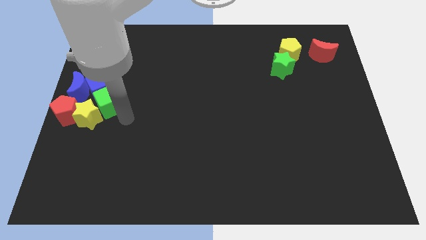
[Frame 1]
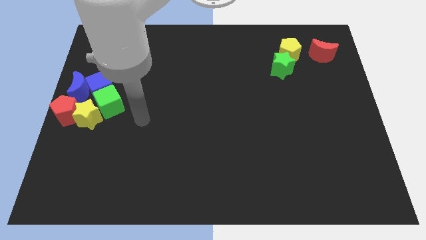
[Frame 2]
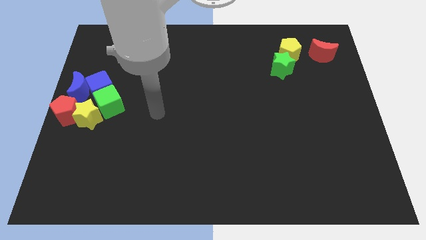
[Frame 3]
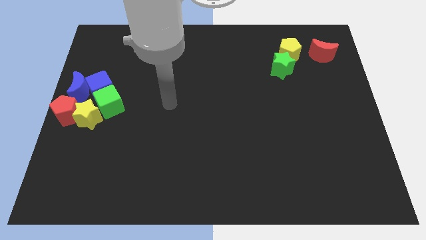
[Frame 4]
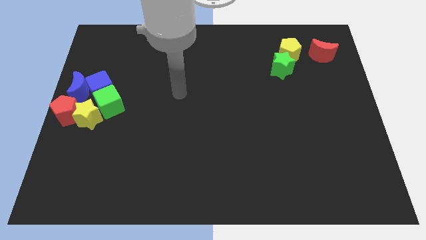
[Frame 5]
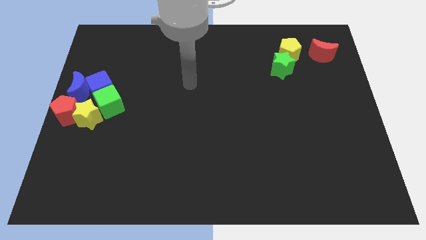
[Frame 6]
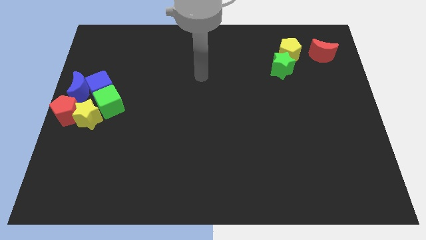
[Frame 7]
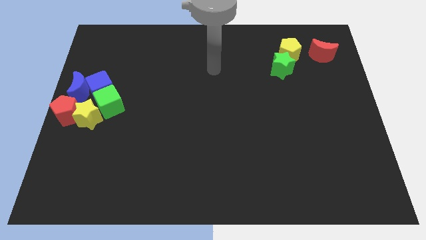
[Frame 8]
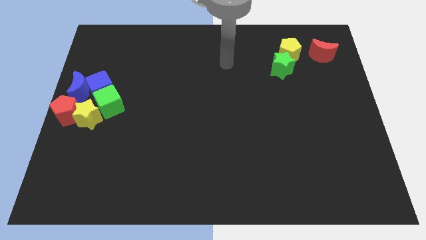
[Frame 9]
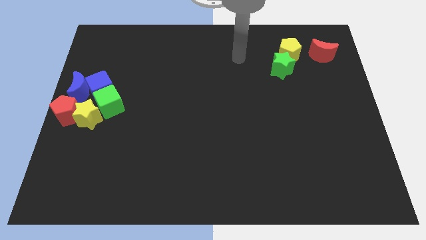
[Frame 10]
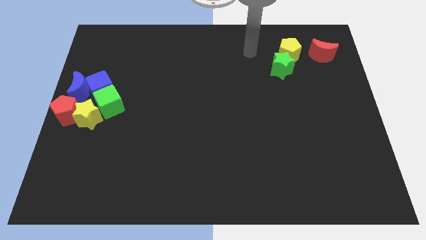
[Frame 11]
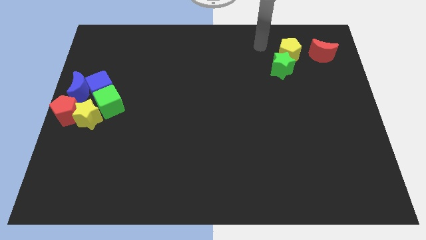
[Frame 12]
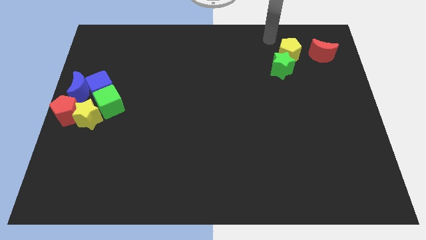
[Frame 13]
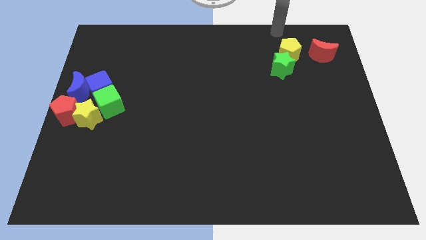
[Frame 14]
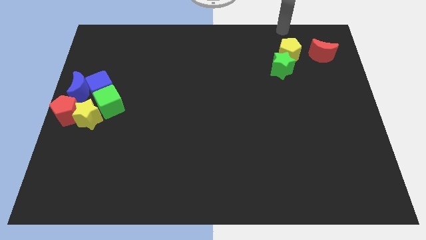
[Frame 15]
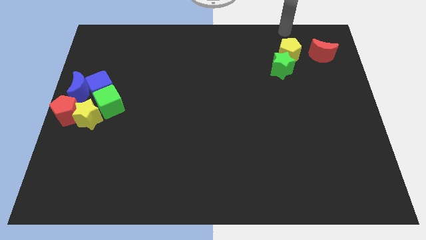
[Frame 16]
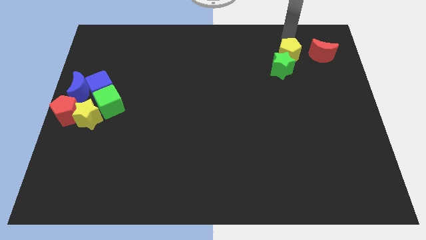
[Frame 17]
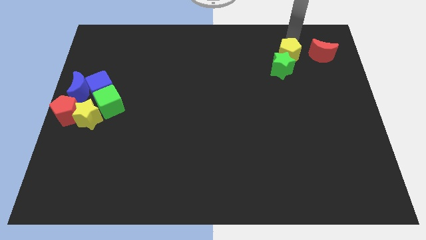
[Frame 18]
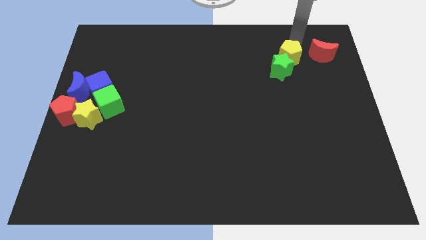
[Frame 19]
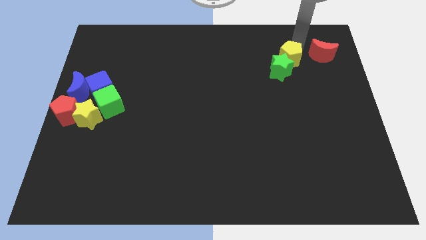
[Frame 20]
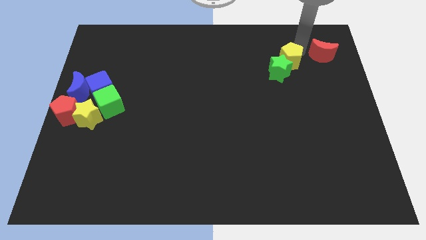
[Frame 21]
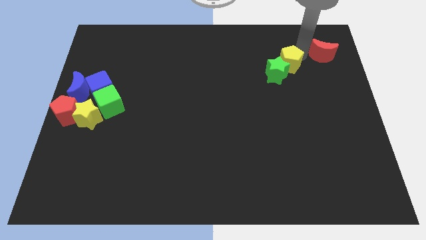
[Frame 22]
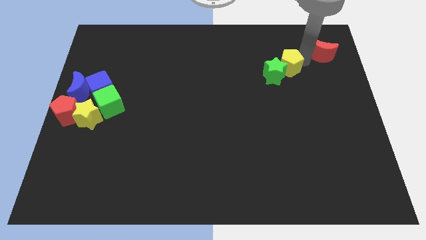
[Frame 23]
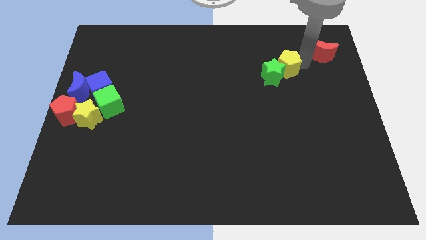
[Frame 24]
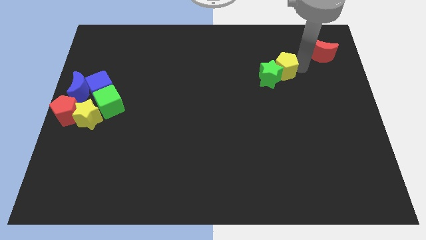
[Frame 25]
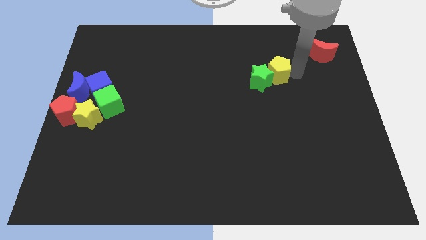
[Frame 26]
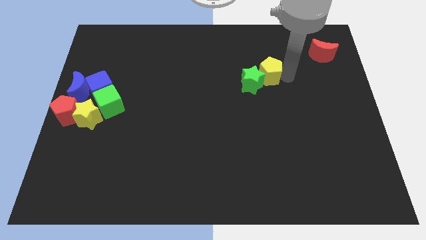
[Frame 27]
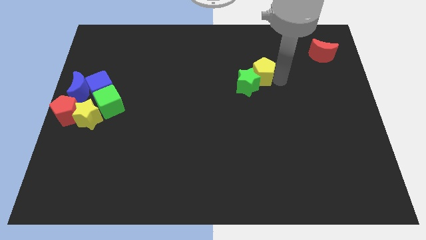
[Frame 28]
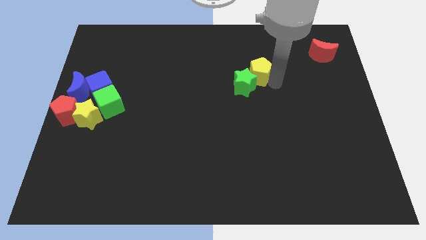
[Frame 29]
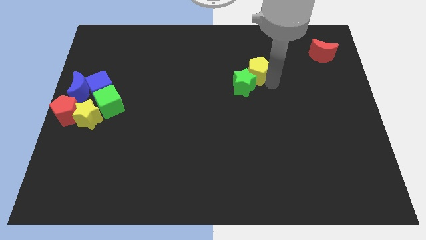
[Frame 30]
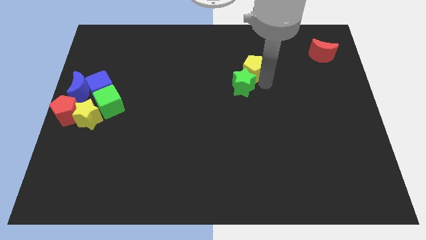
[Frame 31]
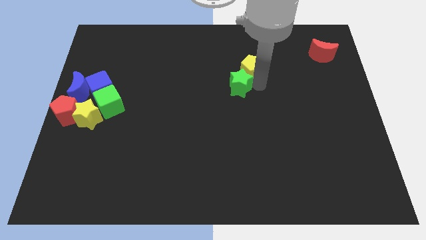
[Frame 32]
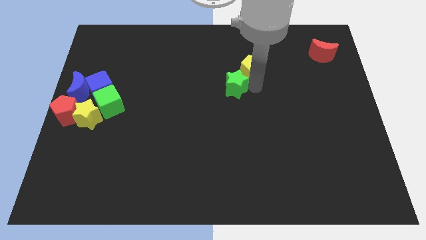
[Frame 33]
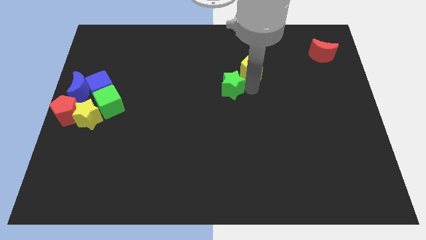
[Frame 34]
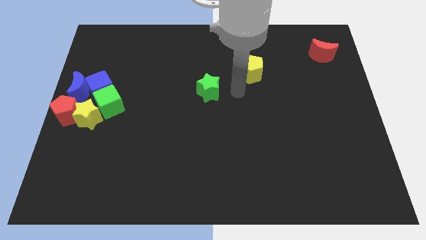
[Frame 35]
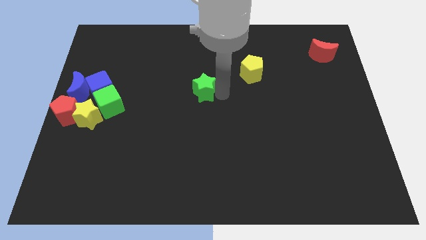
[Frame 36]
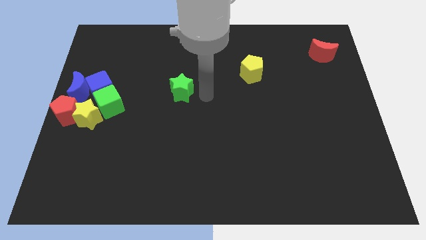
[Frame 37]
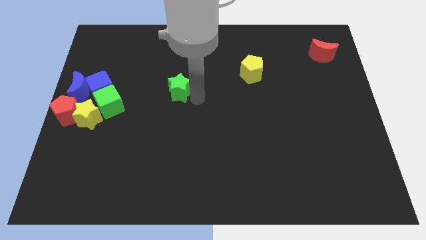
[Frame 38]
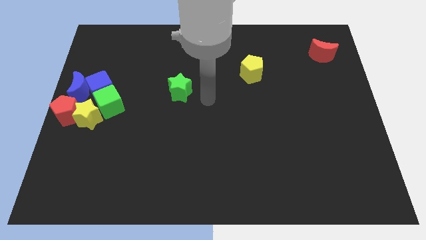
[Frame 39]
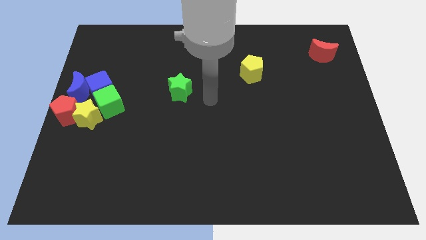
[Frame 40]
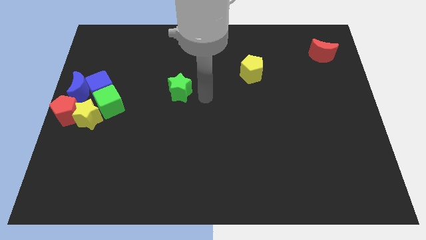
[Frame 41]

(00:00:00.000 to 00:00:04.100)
separate the green star from the yellow pentagon

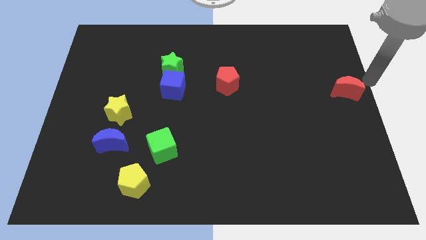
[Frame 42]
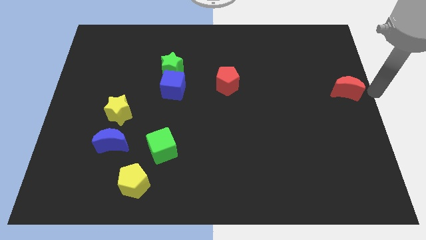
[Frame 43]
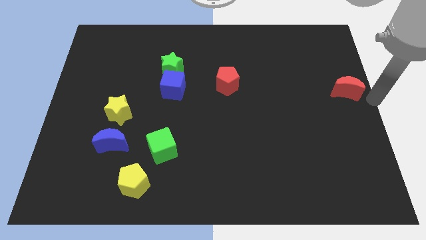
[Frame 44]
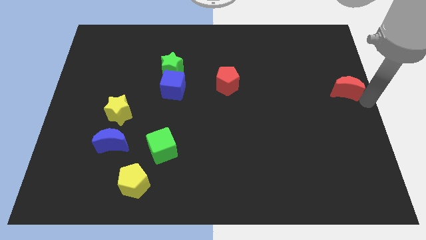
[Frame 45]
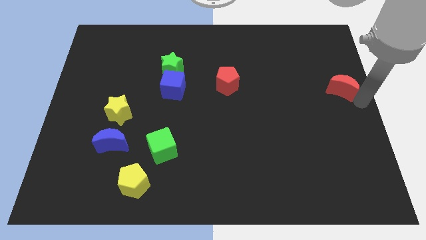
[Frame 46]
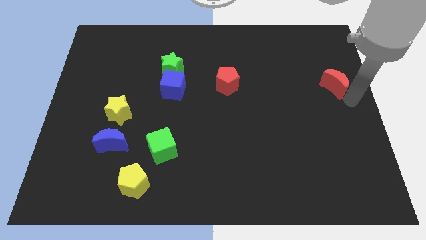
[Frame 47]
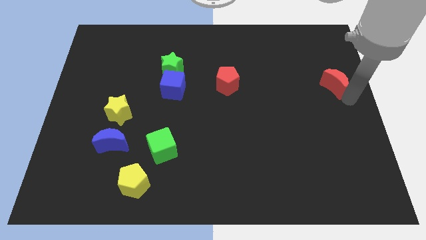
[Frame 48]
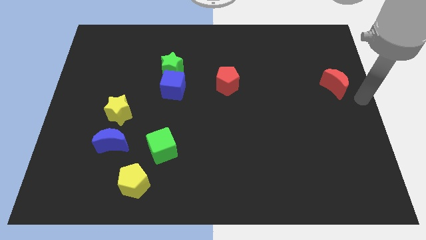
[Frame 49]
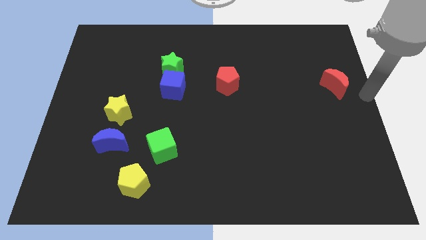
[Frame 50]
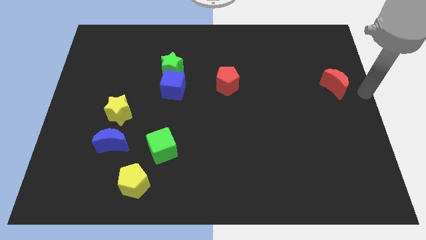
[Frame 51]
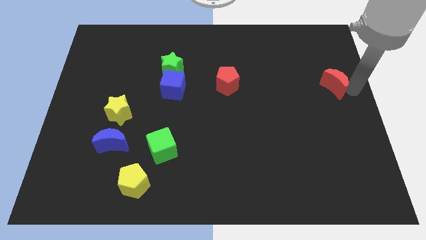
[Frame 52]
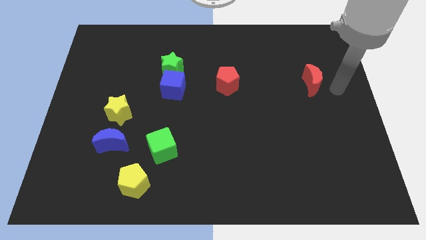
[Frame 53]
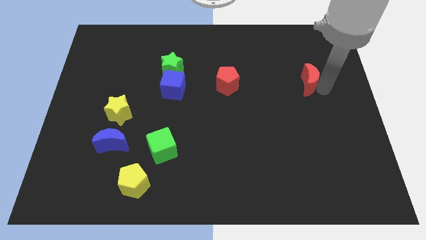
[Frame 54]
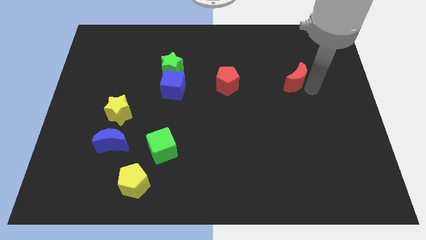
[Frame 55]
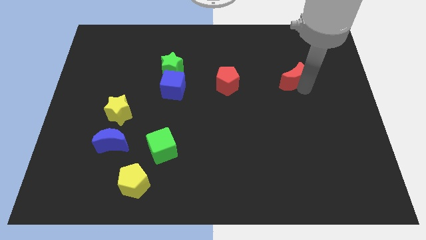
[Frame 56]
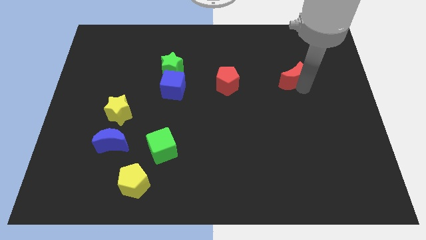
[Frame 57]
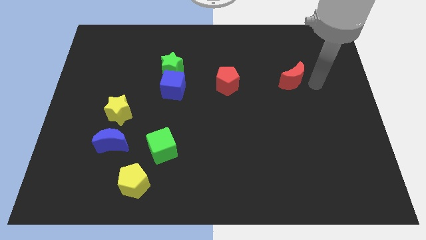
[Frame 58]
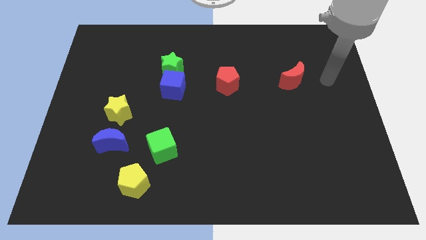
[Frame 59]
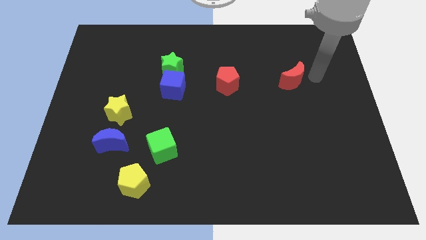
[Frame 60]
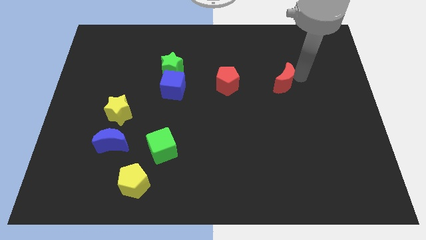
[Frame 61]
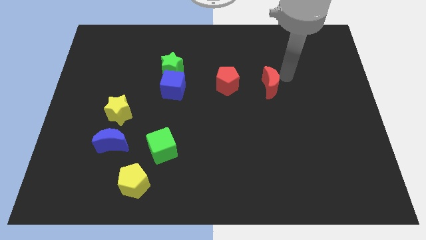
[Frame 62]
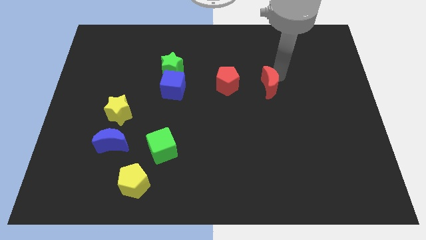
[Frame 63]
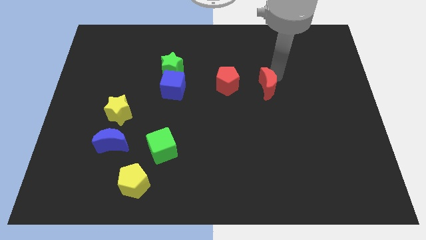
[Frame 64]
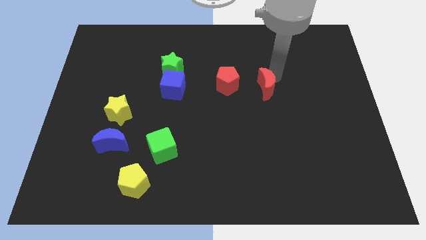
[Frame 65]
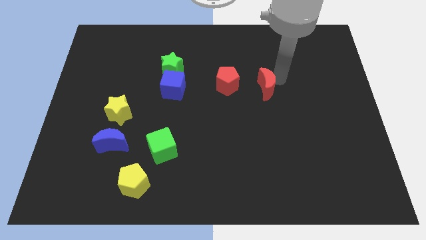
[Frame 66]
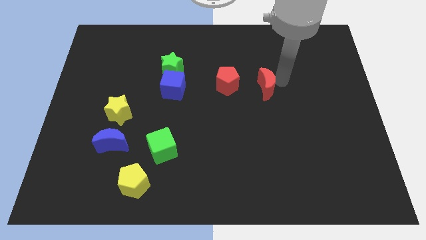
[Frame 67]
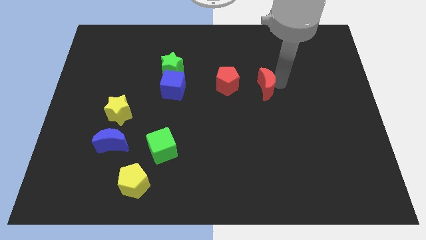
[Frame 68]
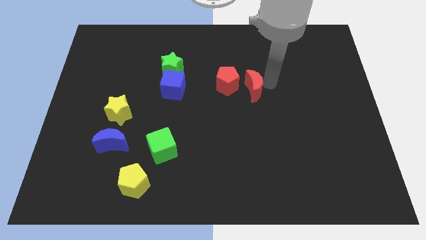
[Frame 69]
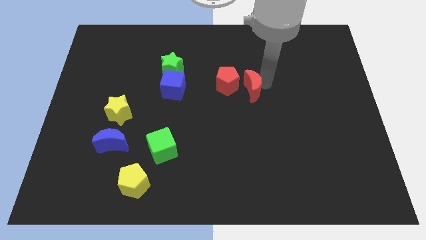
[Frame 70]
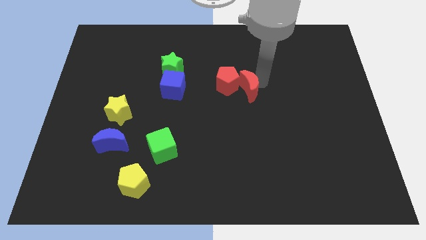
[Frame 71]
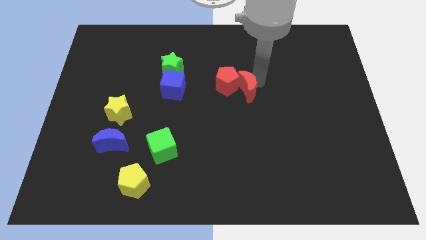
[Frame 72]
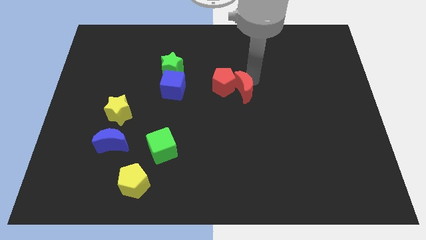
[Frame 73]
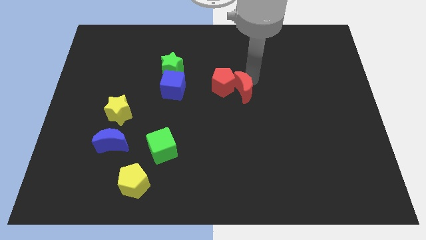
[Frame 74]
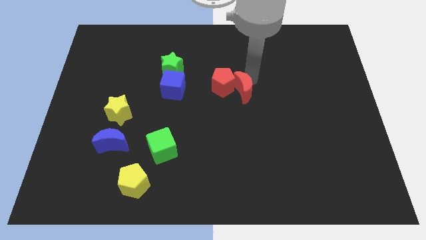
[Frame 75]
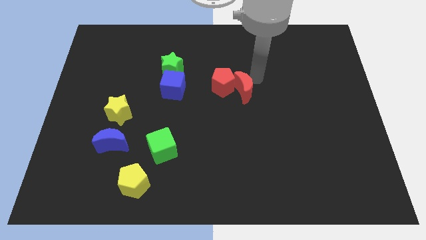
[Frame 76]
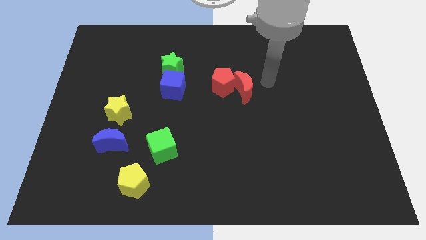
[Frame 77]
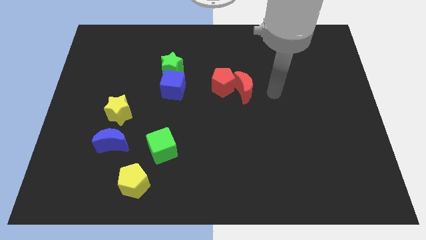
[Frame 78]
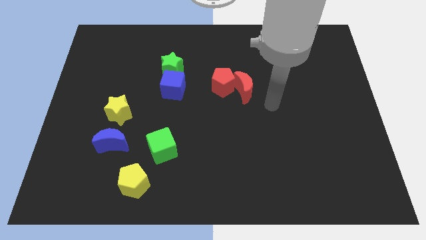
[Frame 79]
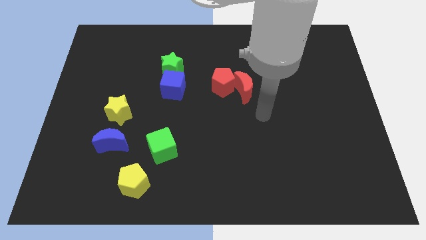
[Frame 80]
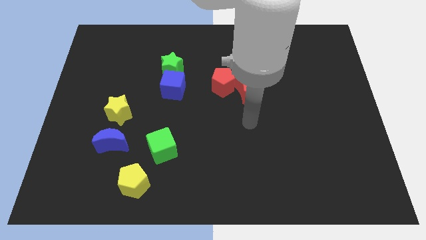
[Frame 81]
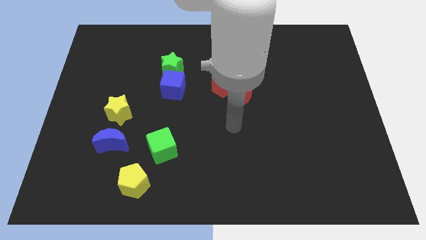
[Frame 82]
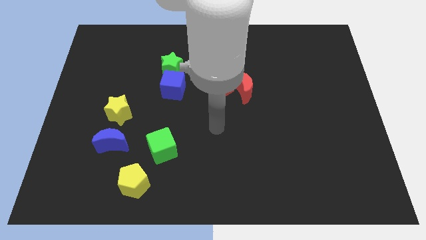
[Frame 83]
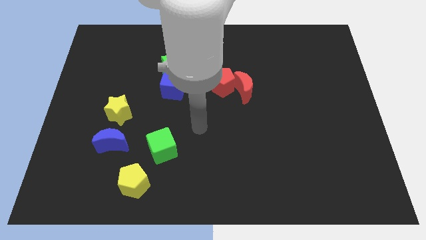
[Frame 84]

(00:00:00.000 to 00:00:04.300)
place the red moon to the right of the red pentagon

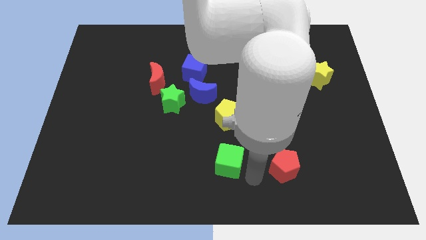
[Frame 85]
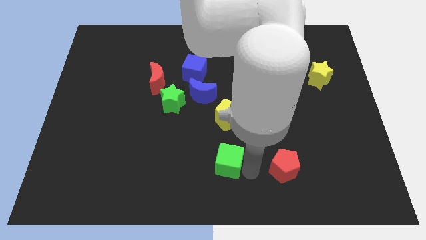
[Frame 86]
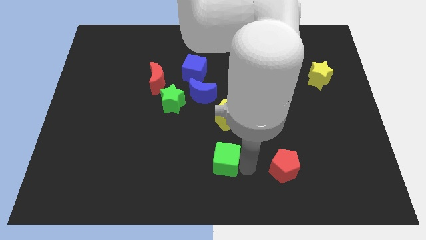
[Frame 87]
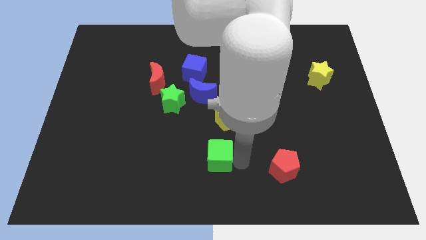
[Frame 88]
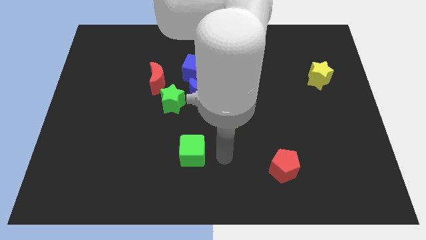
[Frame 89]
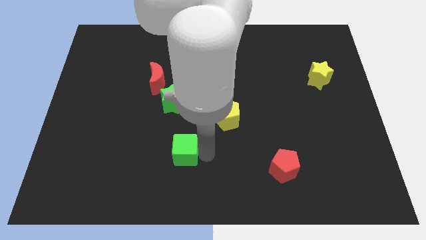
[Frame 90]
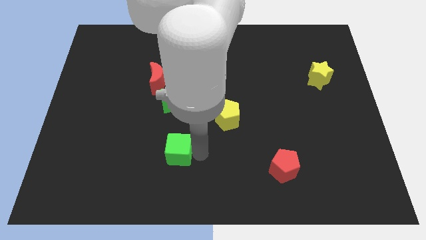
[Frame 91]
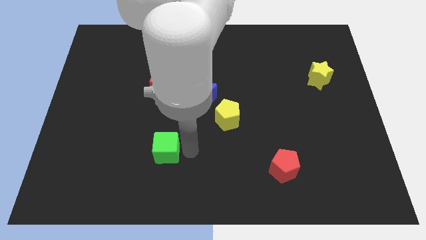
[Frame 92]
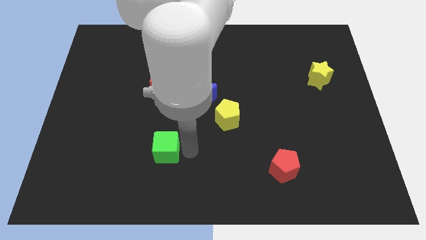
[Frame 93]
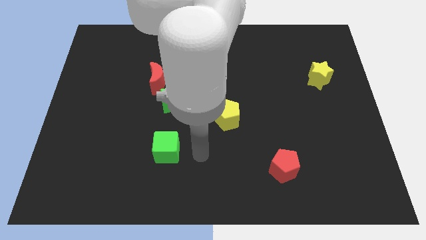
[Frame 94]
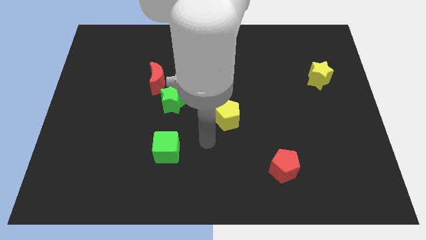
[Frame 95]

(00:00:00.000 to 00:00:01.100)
slide the green cube slightly to the left
